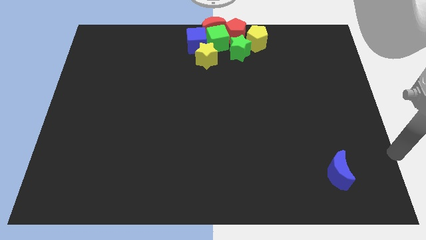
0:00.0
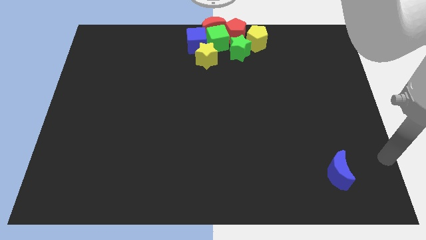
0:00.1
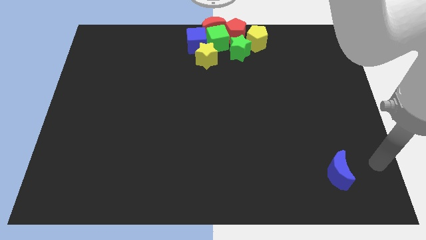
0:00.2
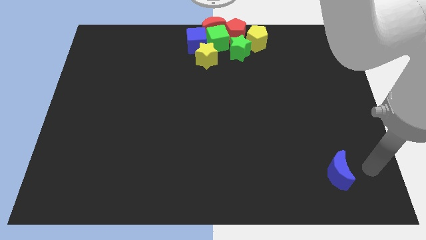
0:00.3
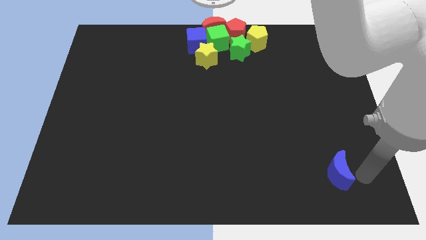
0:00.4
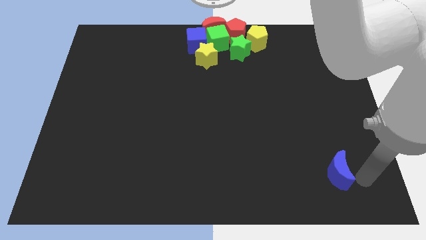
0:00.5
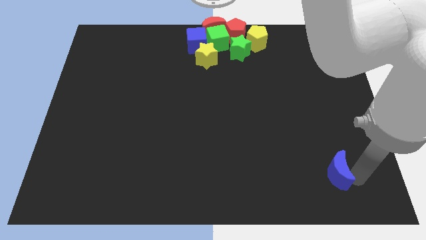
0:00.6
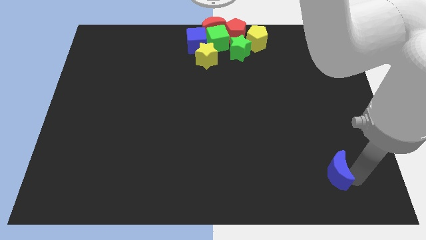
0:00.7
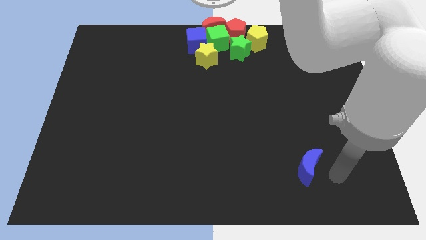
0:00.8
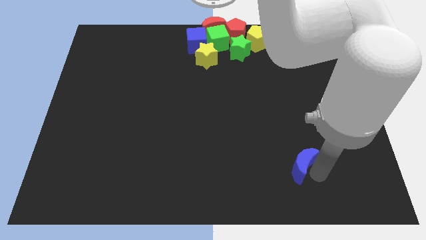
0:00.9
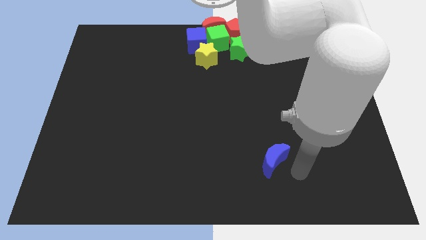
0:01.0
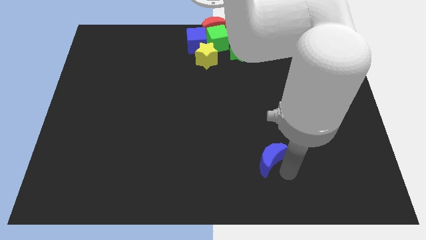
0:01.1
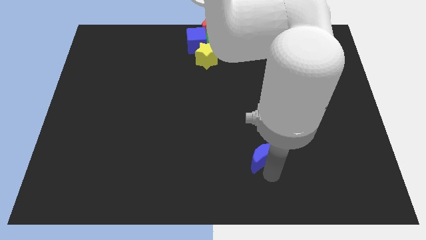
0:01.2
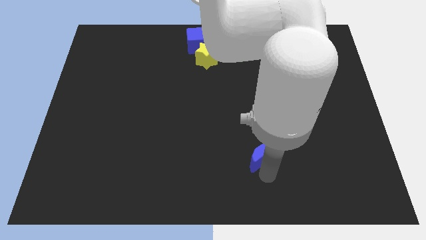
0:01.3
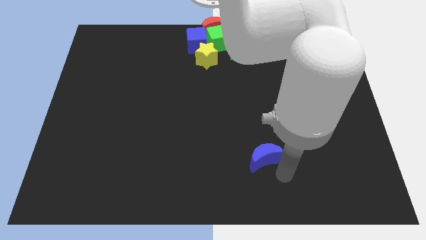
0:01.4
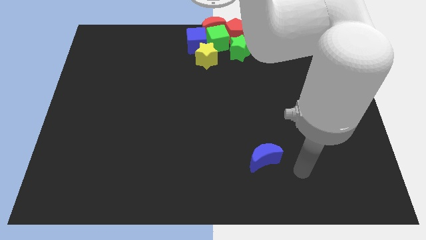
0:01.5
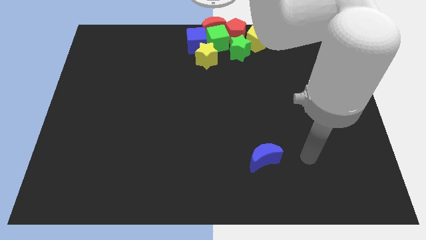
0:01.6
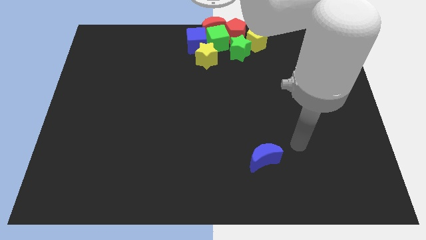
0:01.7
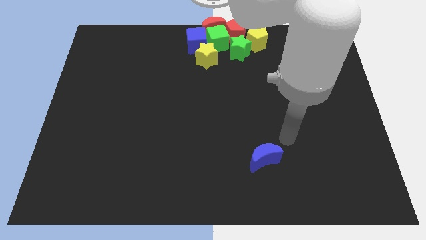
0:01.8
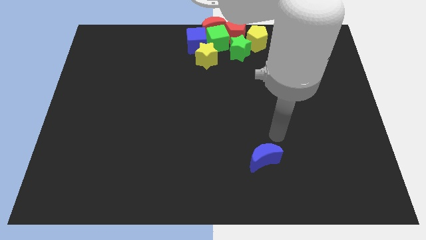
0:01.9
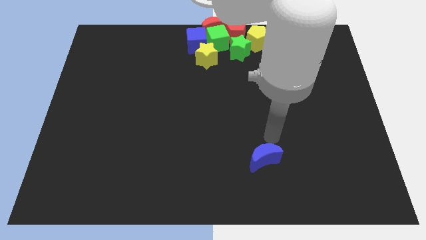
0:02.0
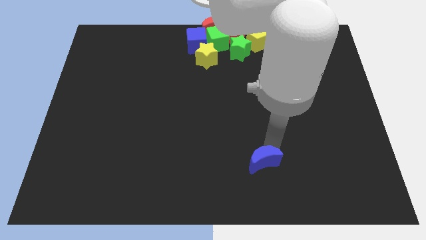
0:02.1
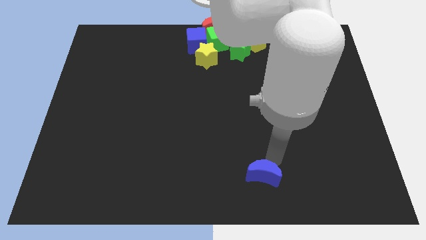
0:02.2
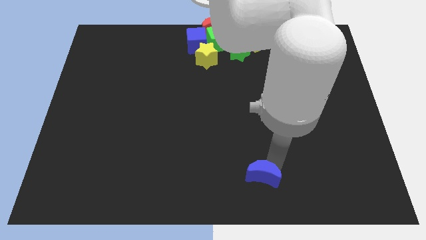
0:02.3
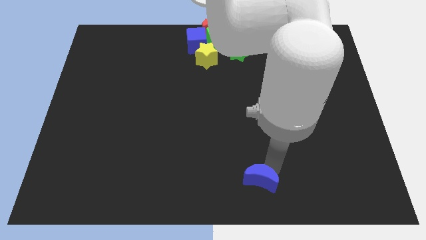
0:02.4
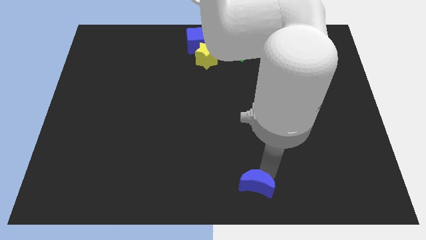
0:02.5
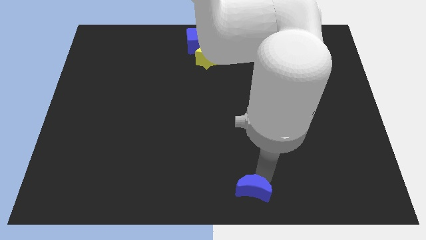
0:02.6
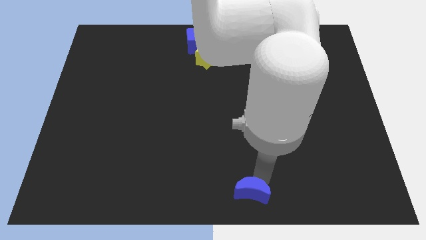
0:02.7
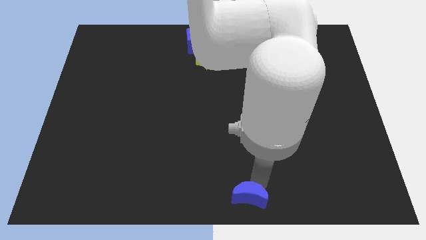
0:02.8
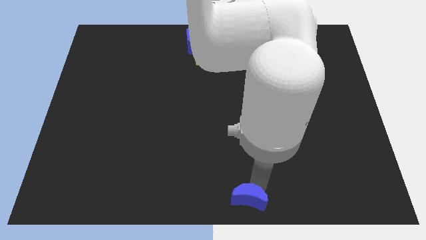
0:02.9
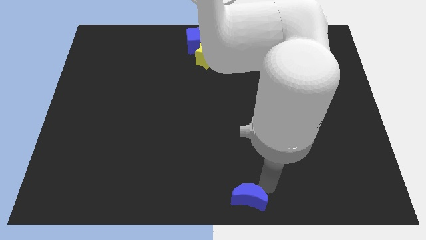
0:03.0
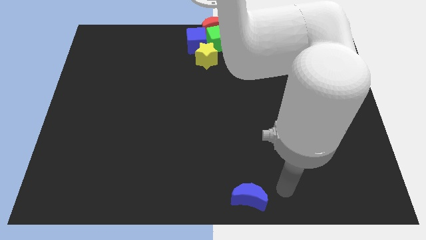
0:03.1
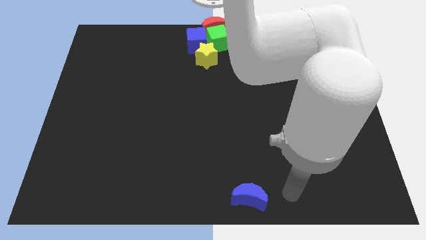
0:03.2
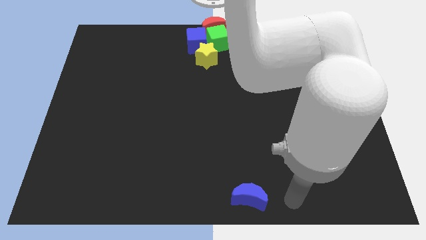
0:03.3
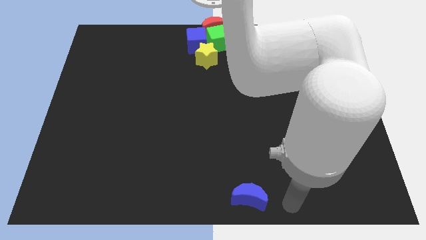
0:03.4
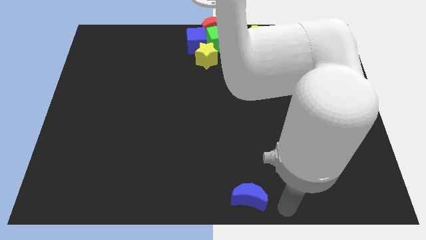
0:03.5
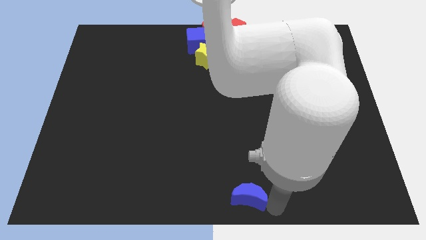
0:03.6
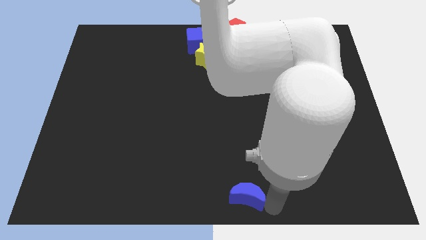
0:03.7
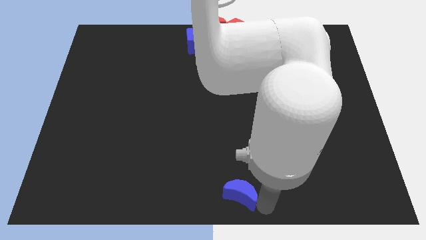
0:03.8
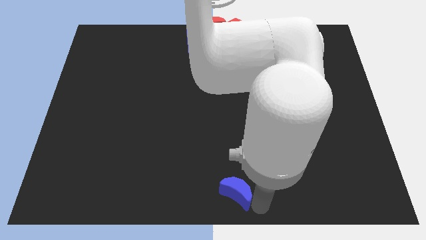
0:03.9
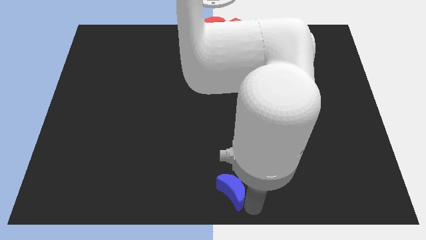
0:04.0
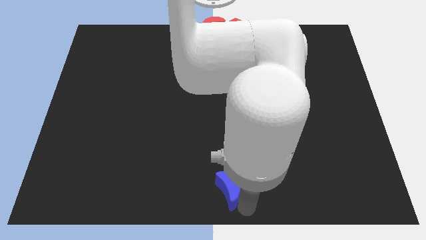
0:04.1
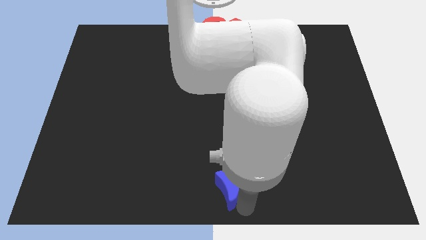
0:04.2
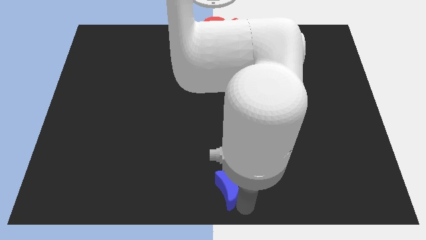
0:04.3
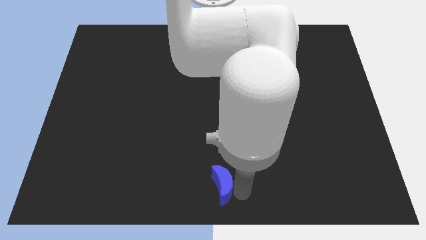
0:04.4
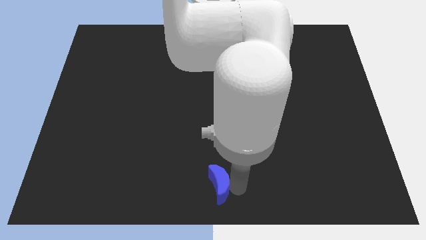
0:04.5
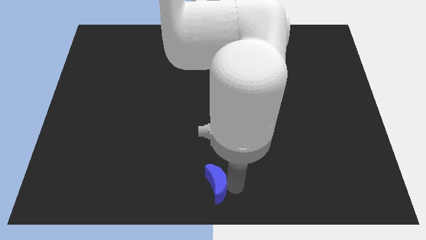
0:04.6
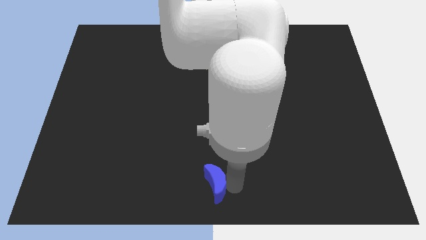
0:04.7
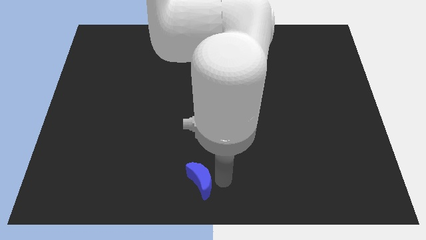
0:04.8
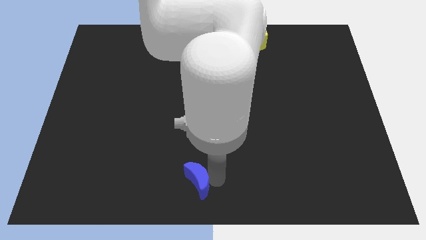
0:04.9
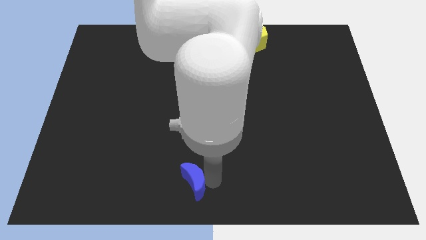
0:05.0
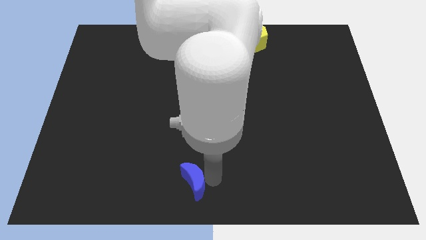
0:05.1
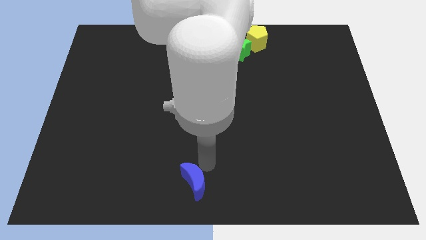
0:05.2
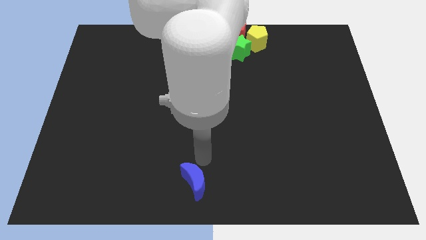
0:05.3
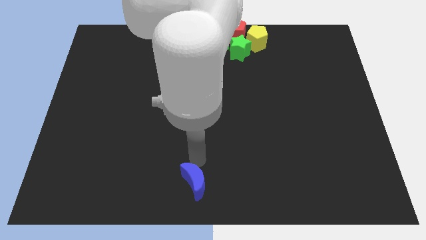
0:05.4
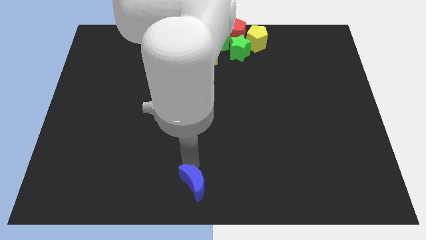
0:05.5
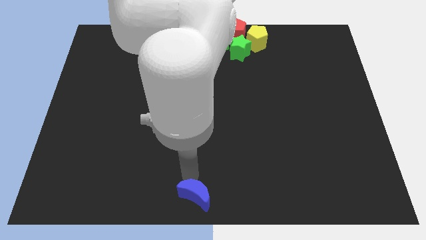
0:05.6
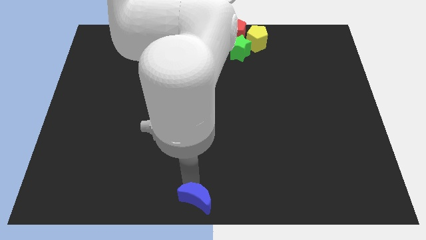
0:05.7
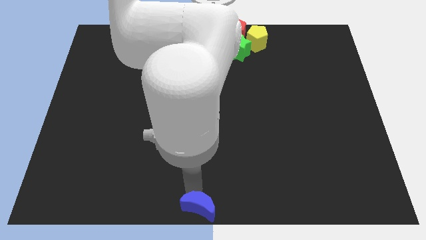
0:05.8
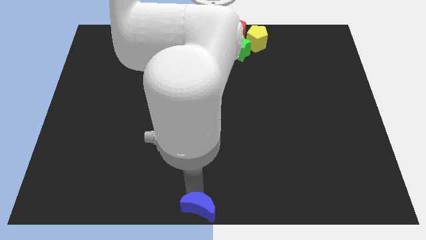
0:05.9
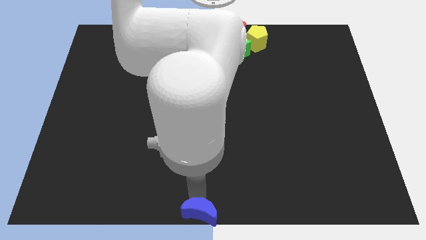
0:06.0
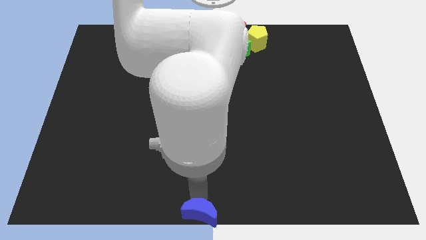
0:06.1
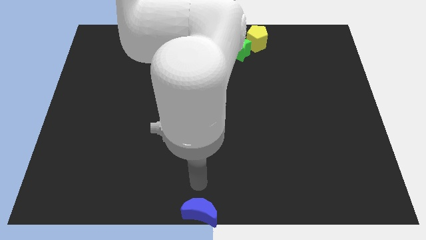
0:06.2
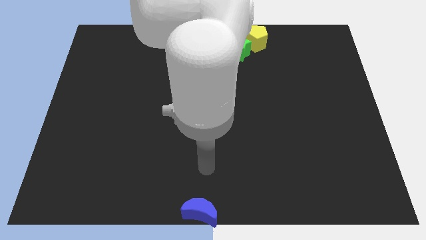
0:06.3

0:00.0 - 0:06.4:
place the blue crescent to the bottom center of the board

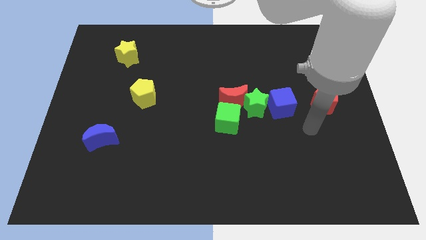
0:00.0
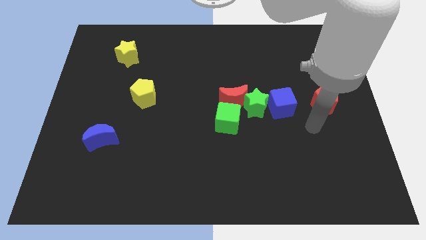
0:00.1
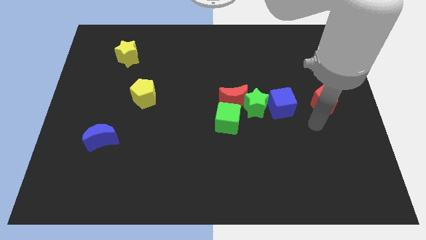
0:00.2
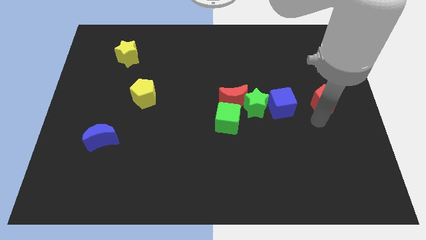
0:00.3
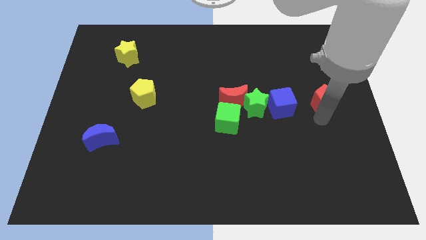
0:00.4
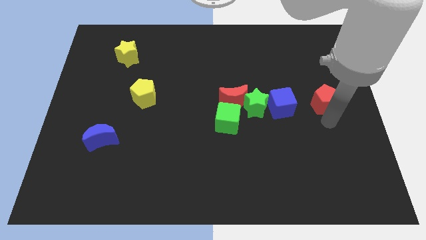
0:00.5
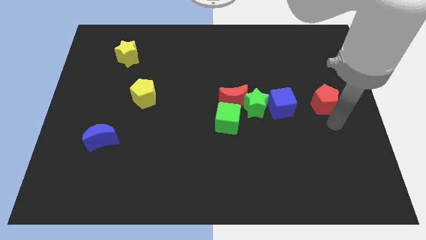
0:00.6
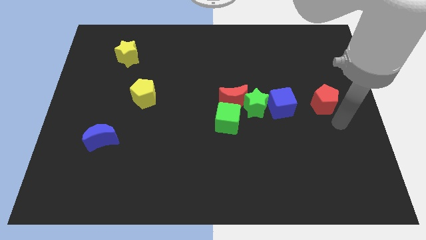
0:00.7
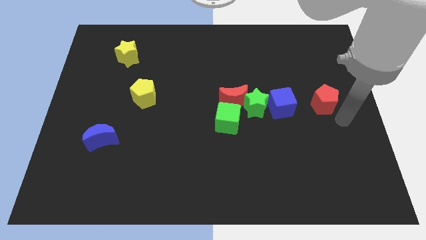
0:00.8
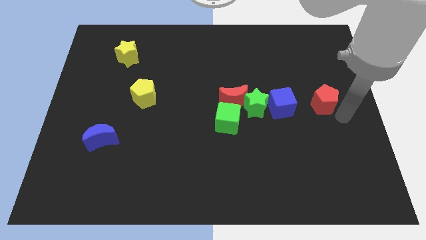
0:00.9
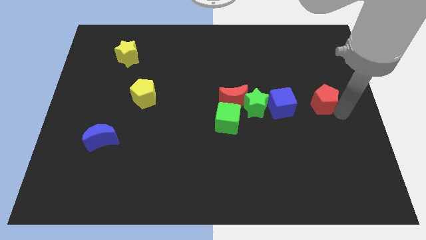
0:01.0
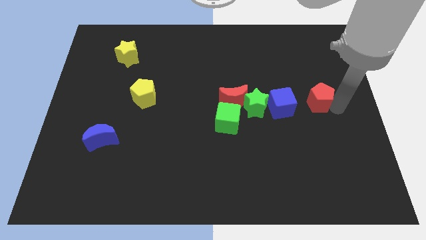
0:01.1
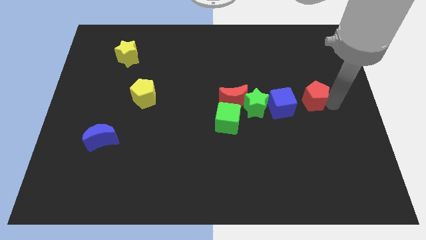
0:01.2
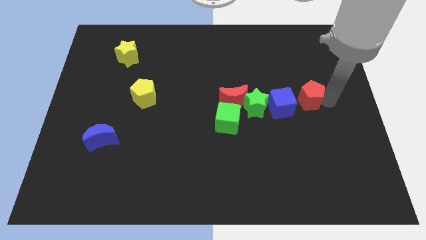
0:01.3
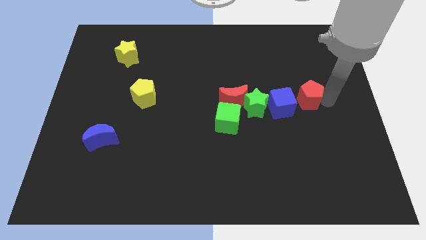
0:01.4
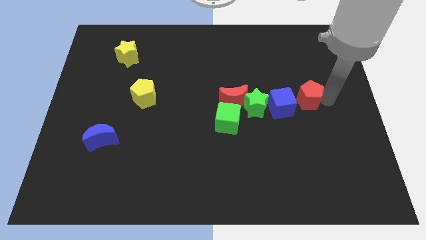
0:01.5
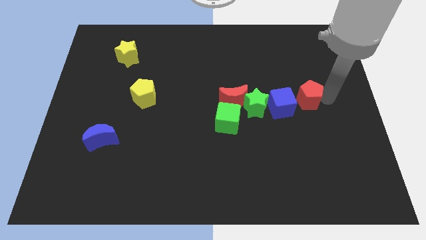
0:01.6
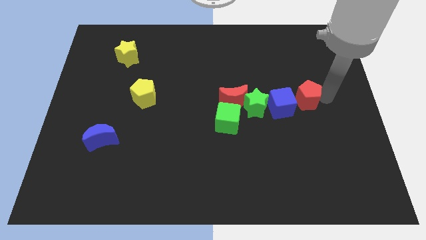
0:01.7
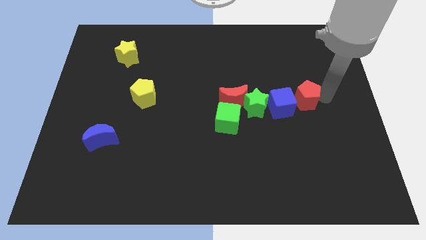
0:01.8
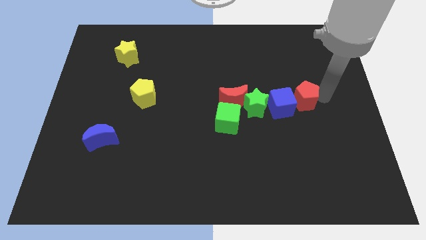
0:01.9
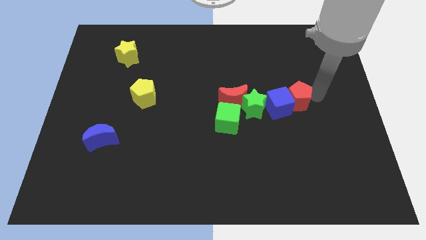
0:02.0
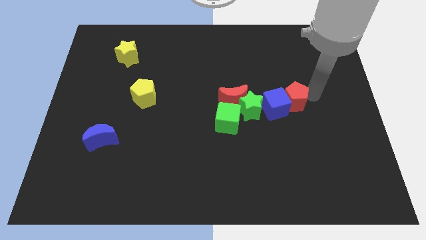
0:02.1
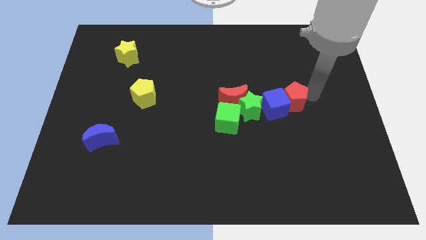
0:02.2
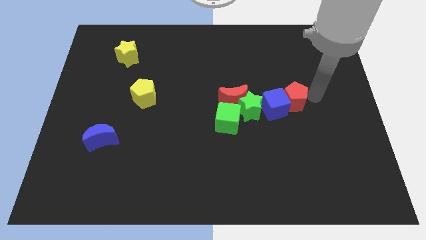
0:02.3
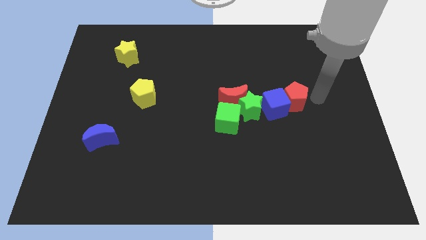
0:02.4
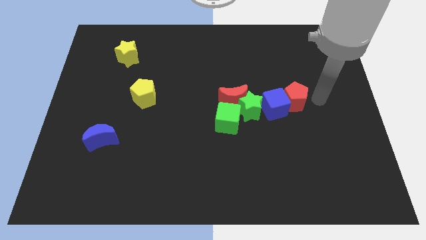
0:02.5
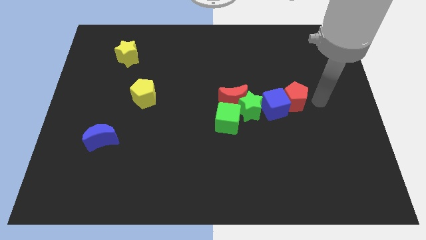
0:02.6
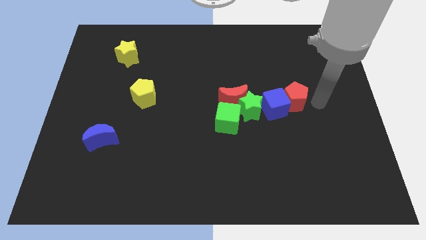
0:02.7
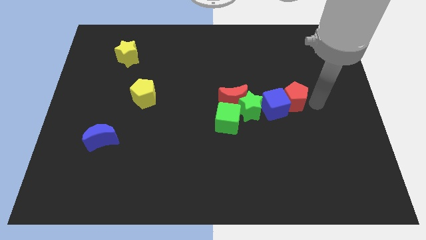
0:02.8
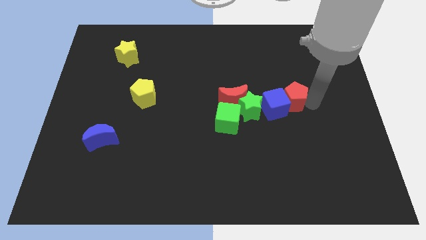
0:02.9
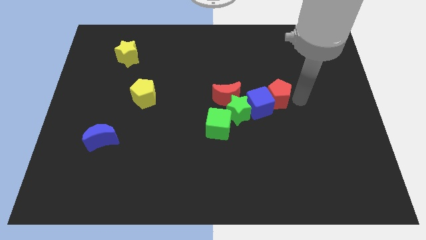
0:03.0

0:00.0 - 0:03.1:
push the red pentagon into the blue cube
